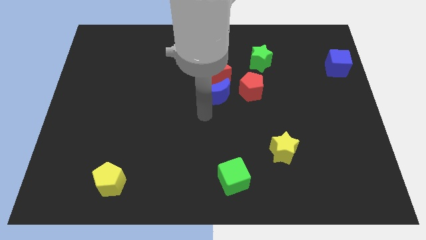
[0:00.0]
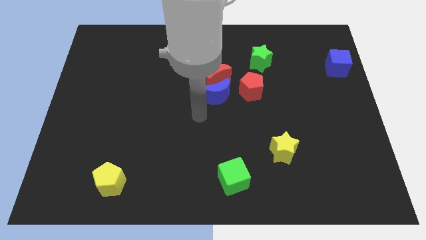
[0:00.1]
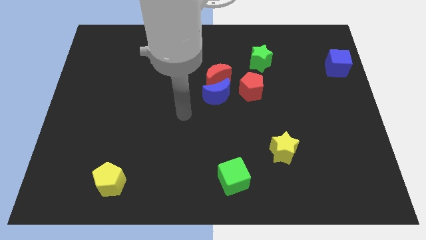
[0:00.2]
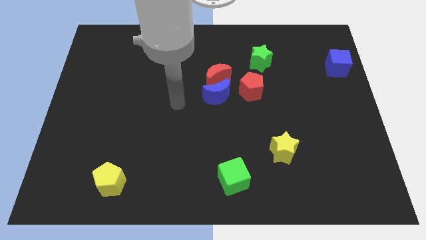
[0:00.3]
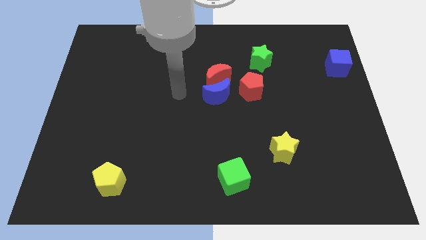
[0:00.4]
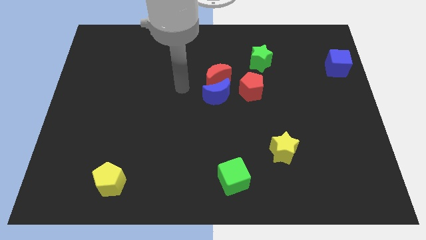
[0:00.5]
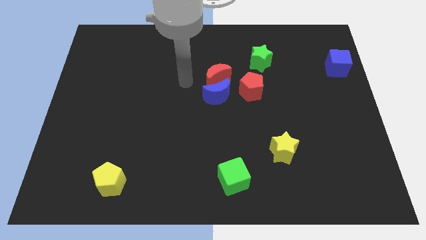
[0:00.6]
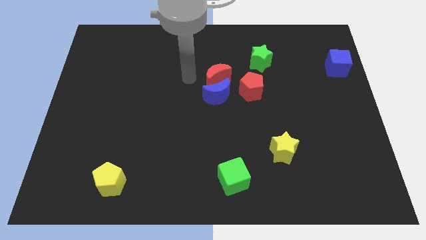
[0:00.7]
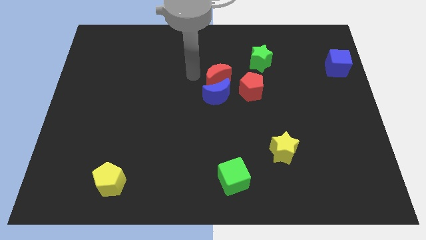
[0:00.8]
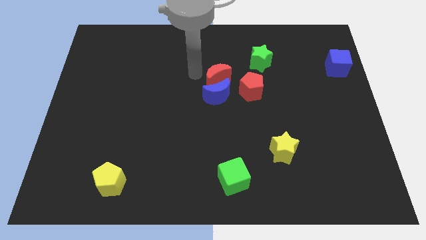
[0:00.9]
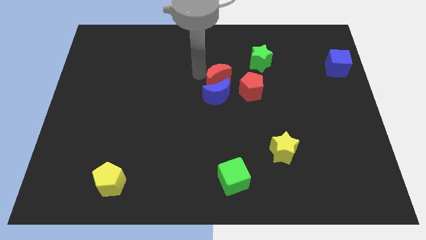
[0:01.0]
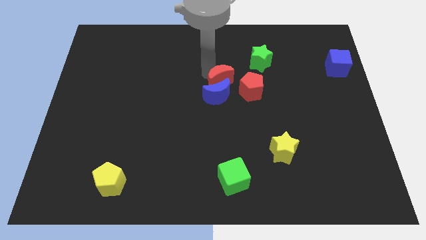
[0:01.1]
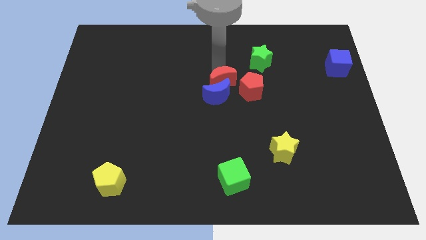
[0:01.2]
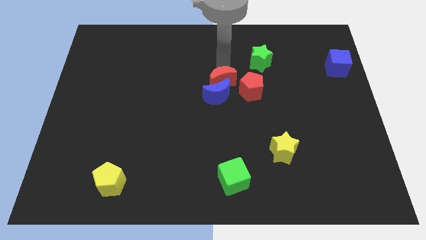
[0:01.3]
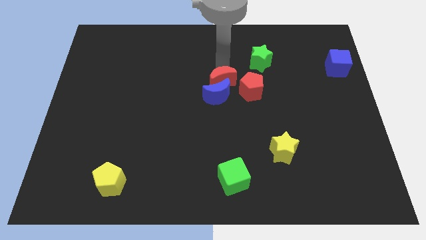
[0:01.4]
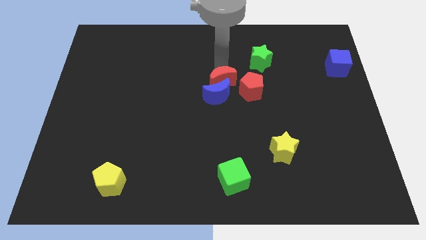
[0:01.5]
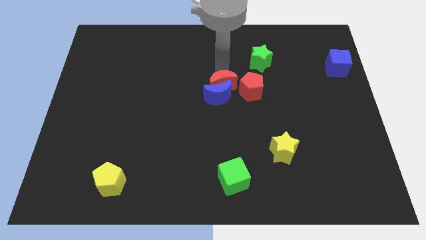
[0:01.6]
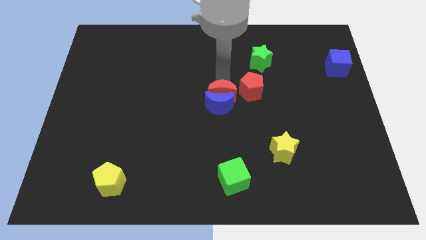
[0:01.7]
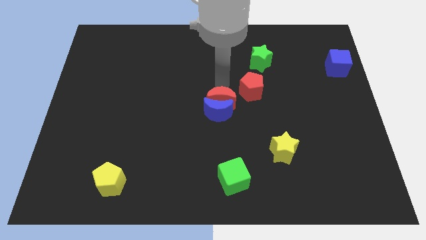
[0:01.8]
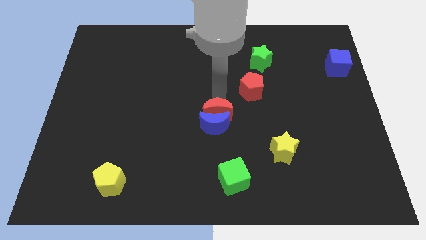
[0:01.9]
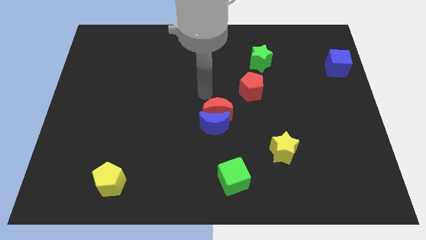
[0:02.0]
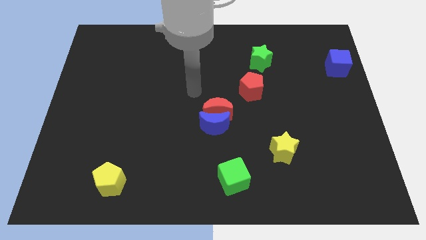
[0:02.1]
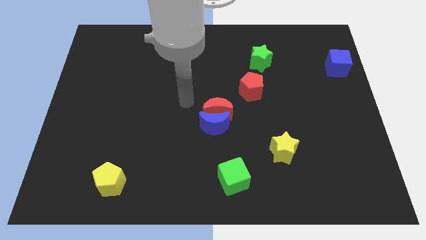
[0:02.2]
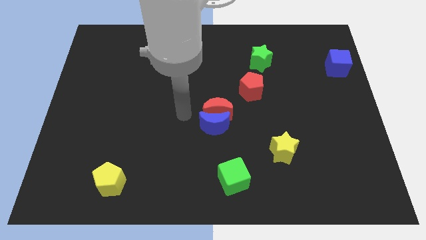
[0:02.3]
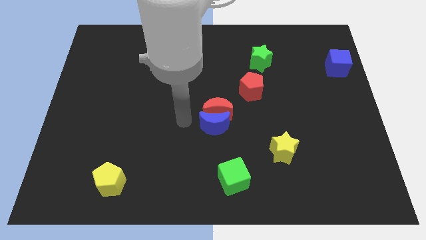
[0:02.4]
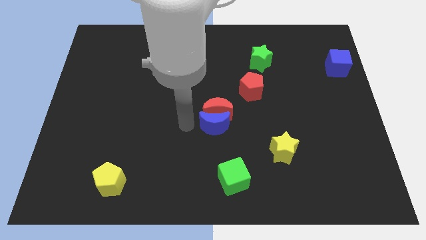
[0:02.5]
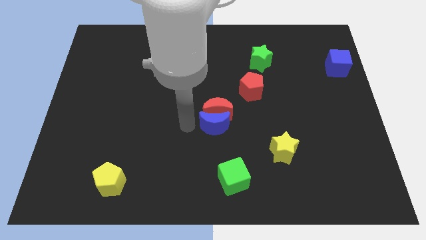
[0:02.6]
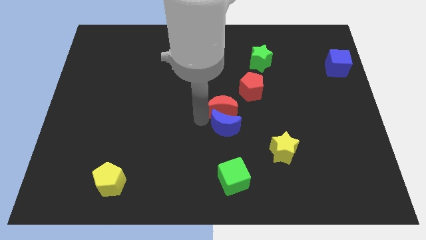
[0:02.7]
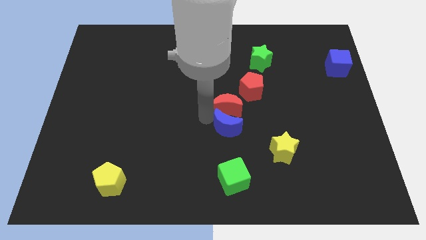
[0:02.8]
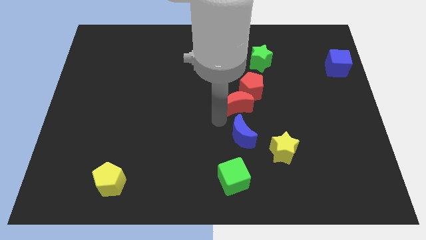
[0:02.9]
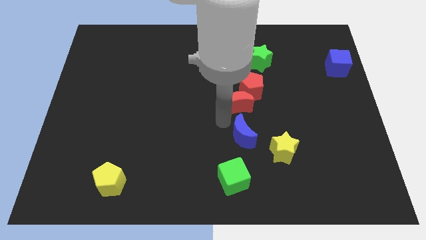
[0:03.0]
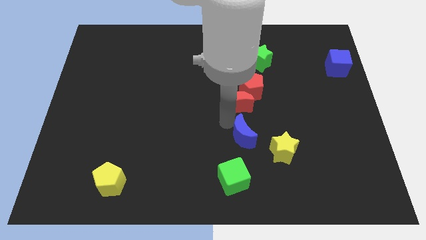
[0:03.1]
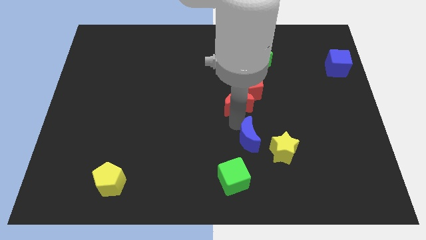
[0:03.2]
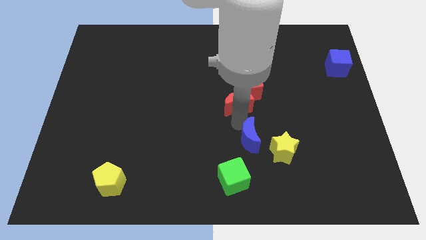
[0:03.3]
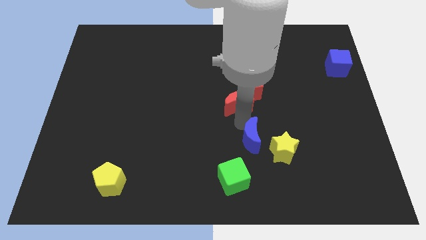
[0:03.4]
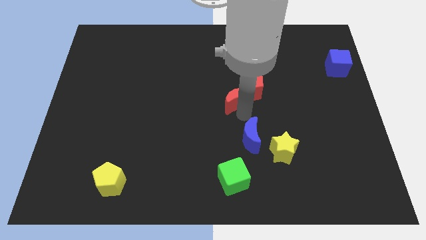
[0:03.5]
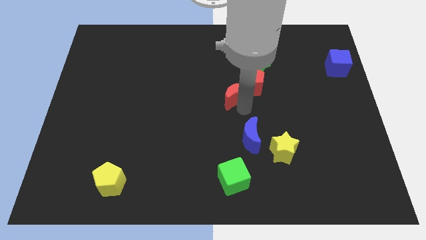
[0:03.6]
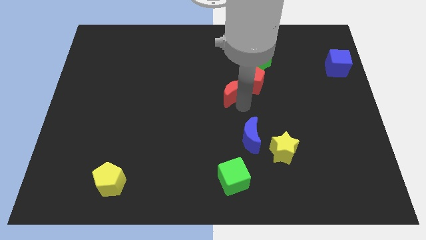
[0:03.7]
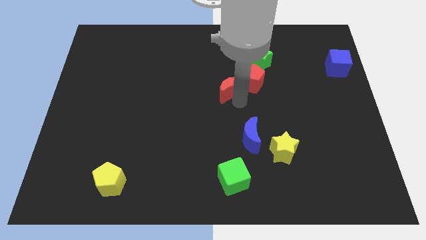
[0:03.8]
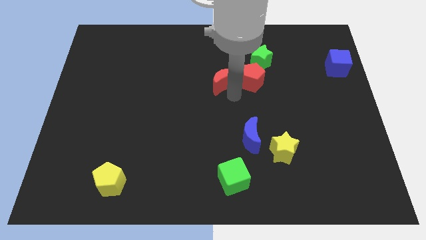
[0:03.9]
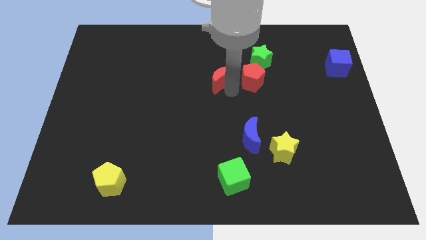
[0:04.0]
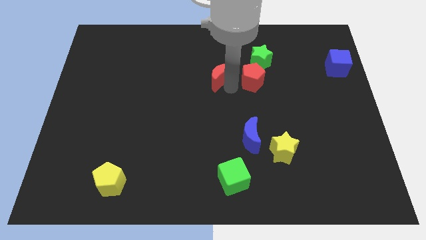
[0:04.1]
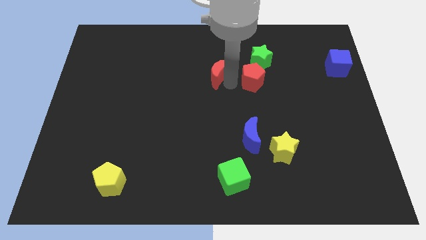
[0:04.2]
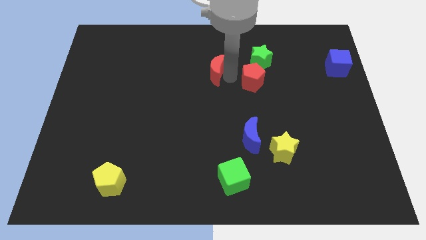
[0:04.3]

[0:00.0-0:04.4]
separate the blue and red crescents

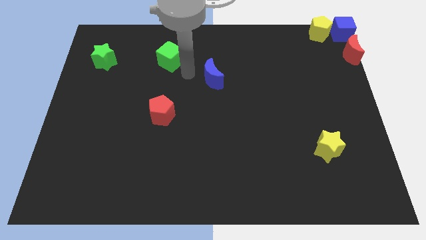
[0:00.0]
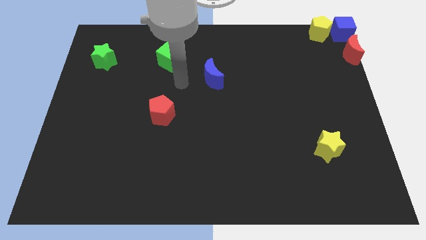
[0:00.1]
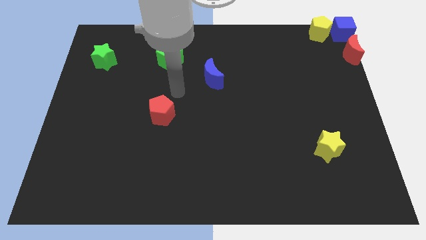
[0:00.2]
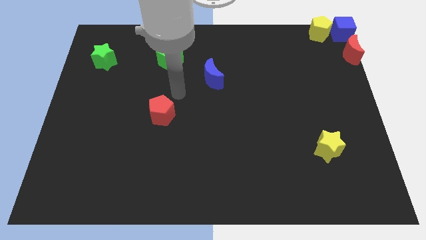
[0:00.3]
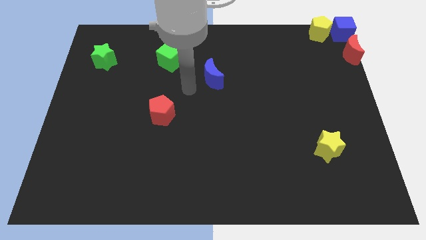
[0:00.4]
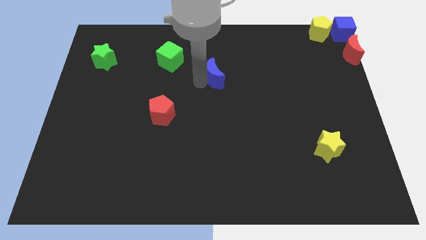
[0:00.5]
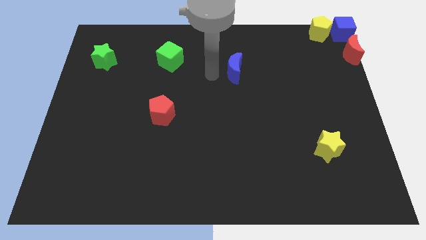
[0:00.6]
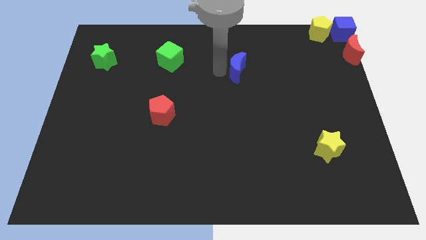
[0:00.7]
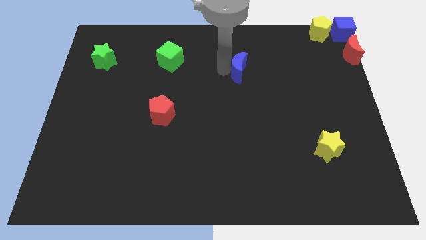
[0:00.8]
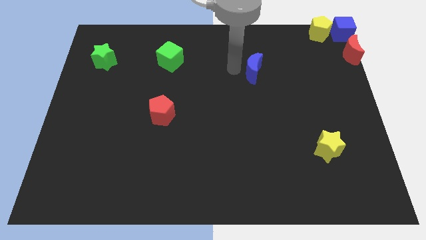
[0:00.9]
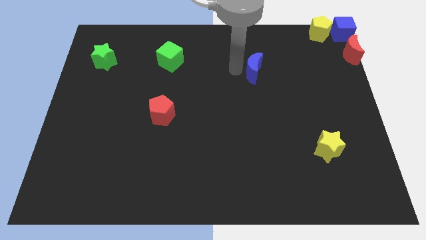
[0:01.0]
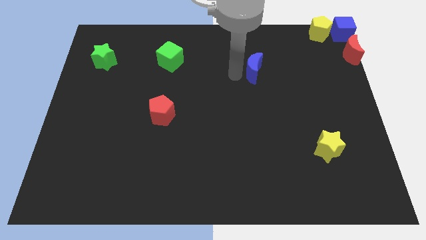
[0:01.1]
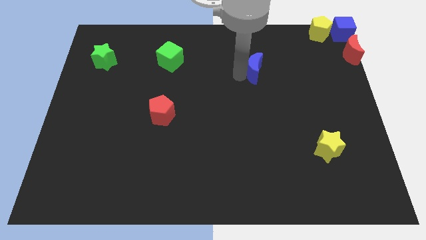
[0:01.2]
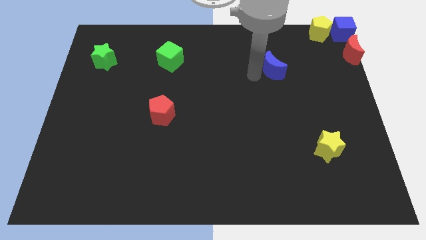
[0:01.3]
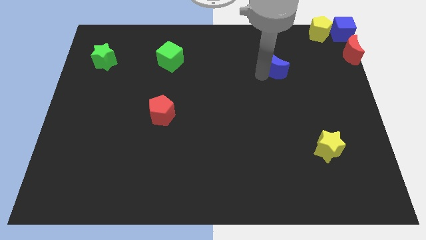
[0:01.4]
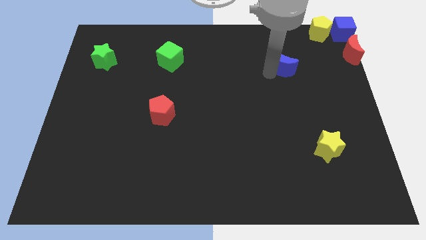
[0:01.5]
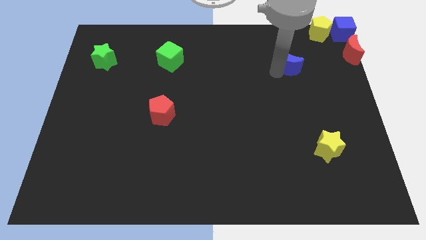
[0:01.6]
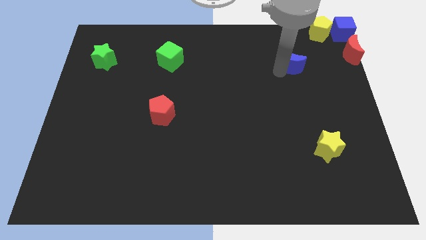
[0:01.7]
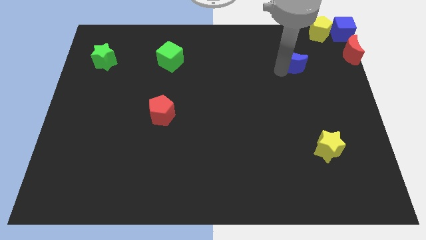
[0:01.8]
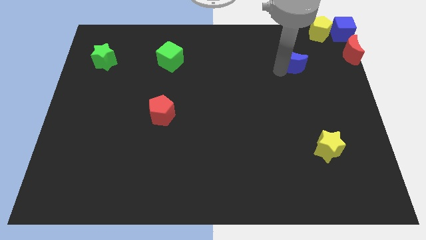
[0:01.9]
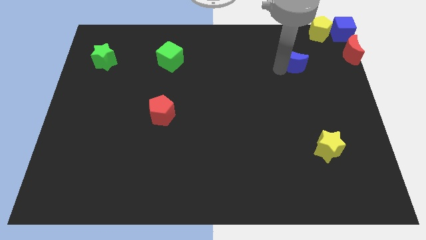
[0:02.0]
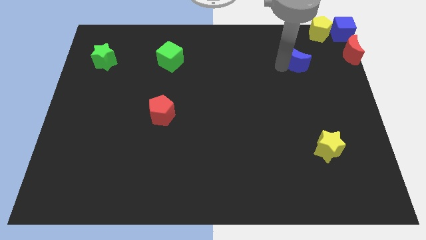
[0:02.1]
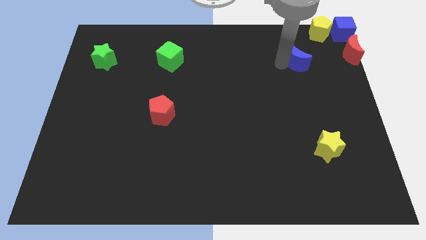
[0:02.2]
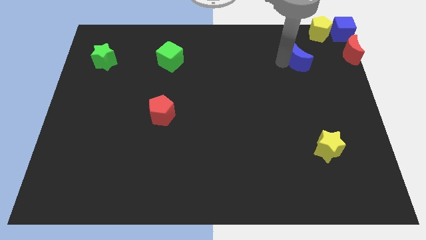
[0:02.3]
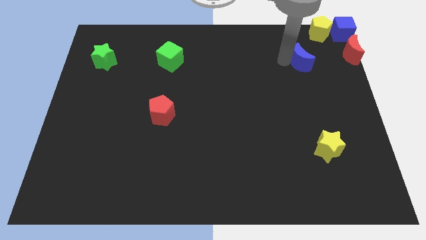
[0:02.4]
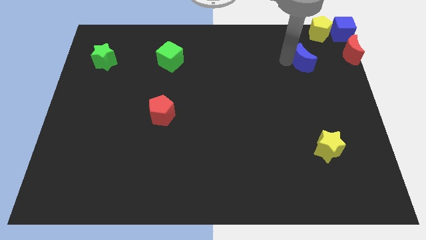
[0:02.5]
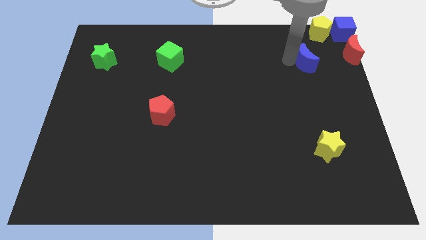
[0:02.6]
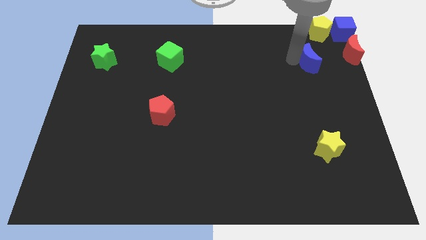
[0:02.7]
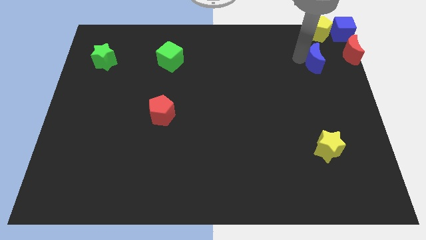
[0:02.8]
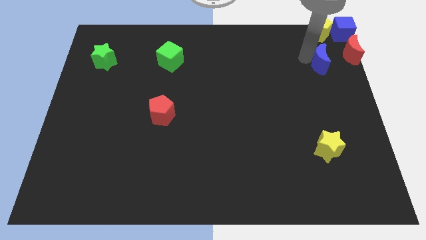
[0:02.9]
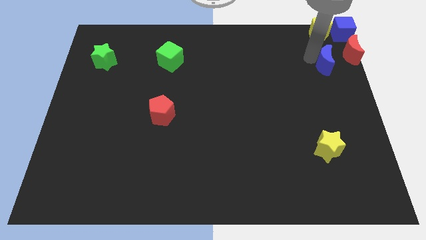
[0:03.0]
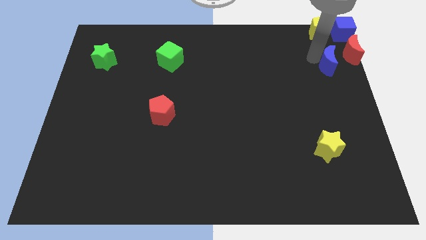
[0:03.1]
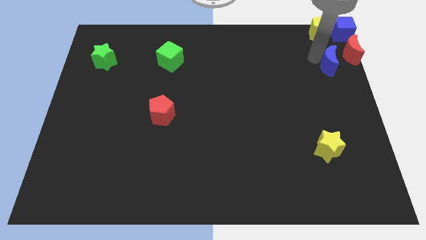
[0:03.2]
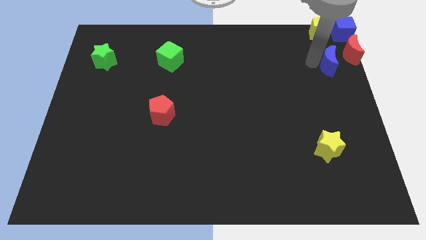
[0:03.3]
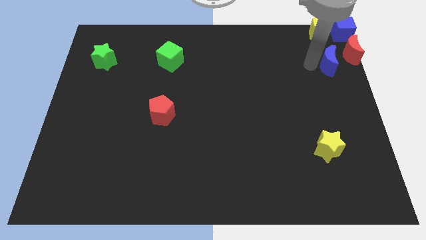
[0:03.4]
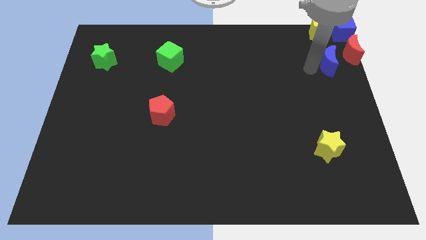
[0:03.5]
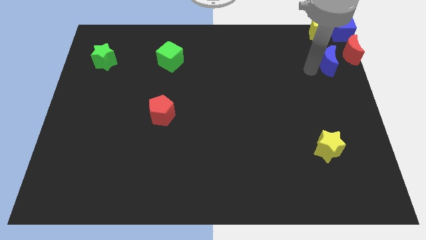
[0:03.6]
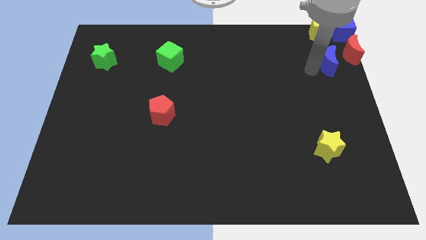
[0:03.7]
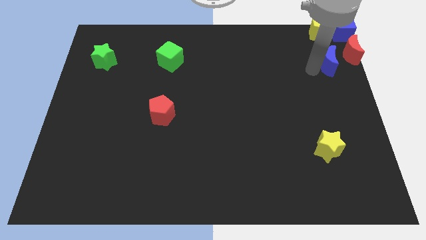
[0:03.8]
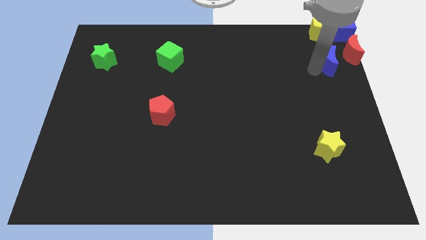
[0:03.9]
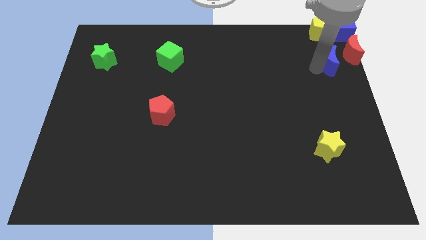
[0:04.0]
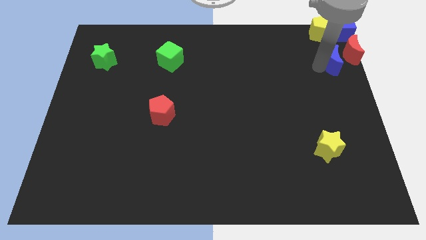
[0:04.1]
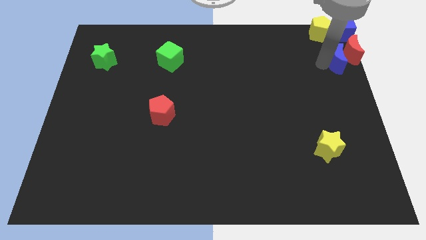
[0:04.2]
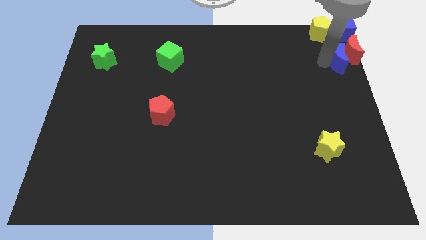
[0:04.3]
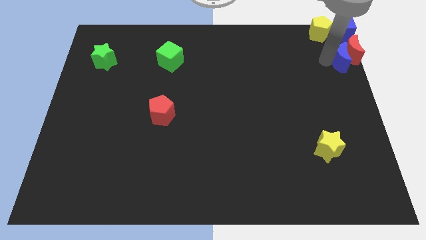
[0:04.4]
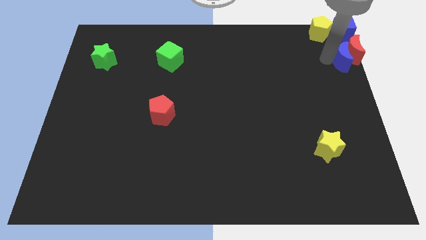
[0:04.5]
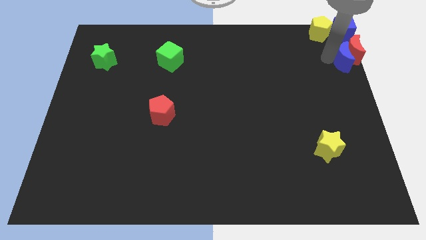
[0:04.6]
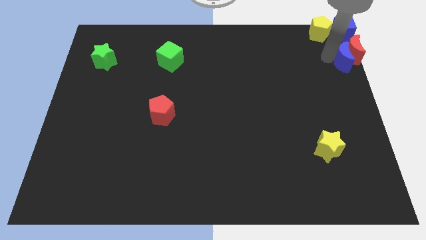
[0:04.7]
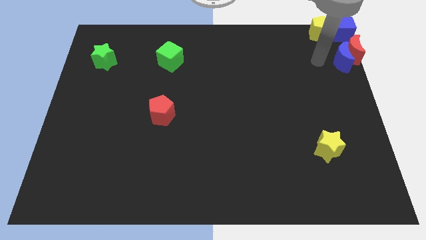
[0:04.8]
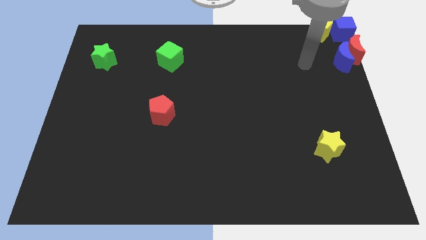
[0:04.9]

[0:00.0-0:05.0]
push the blue moon into red moon
